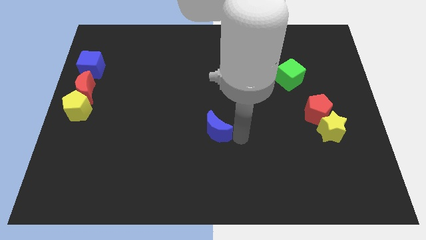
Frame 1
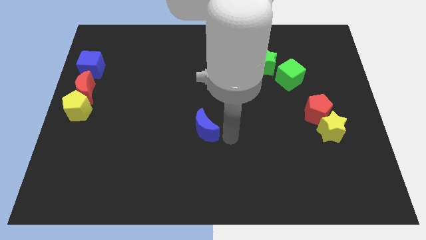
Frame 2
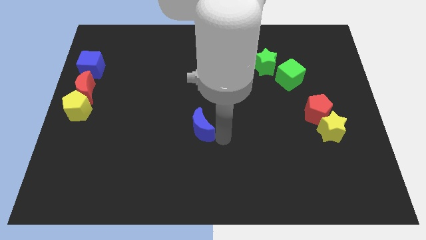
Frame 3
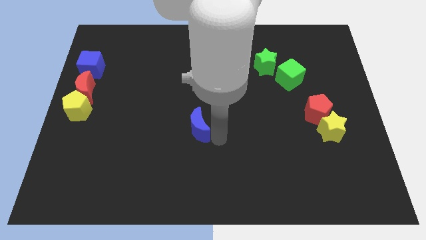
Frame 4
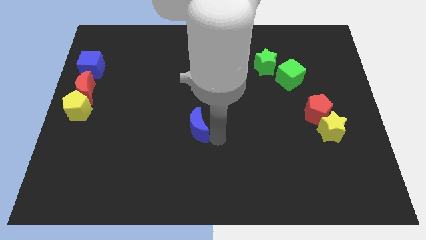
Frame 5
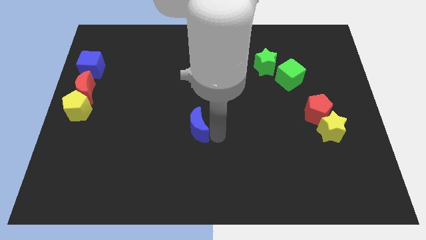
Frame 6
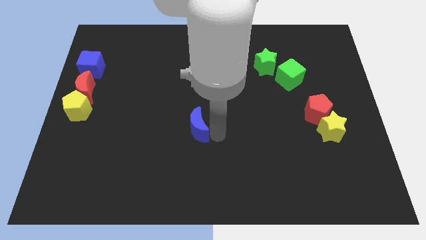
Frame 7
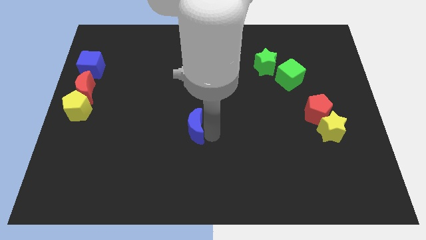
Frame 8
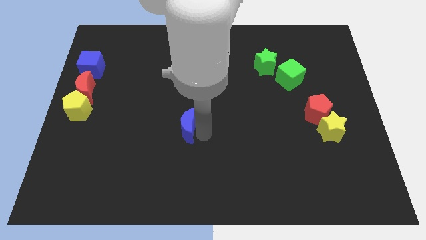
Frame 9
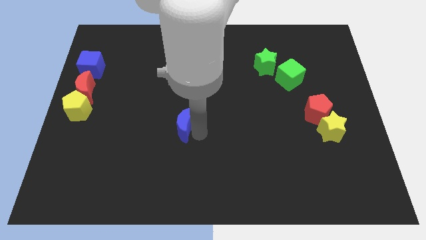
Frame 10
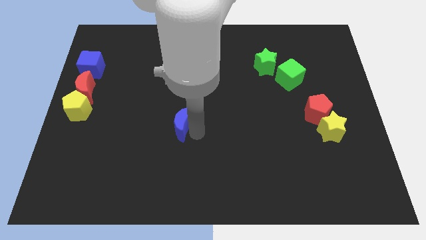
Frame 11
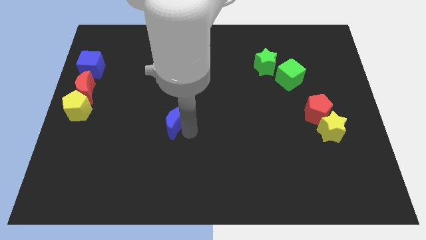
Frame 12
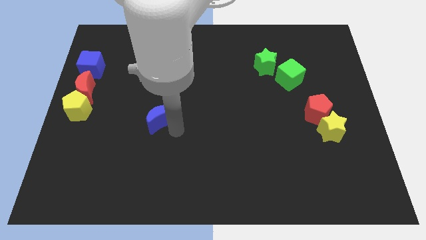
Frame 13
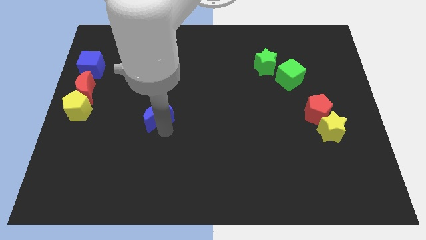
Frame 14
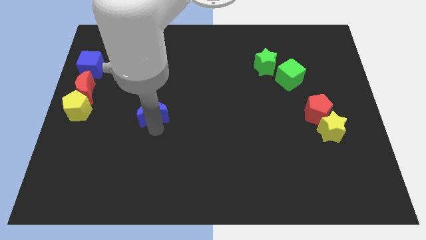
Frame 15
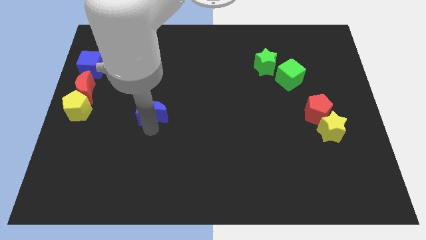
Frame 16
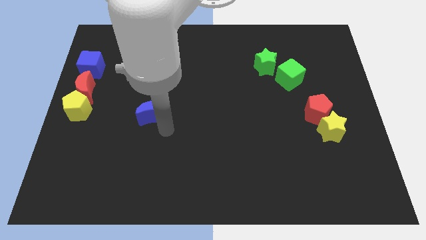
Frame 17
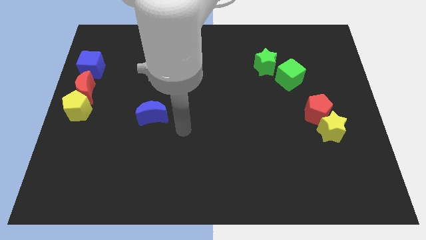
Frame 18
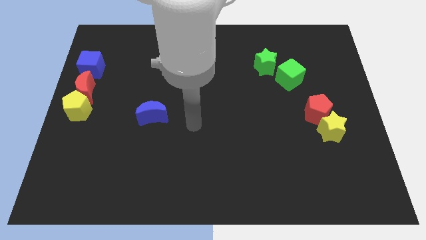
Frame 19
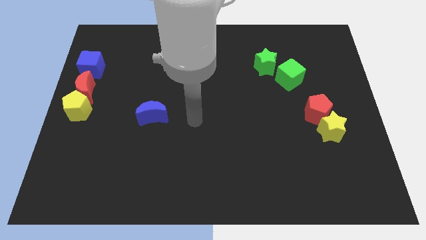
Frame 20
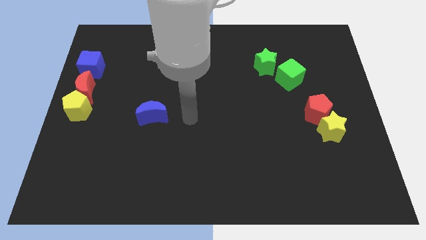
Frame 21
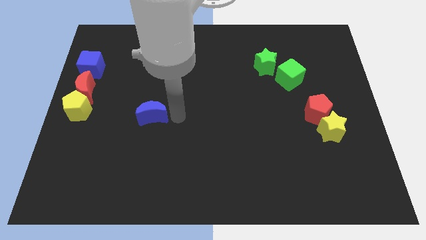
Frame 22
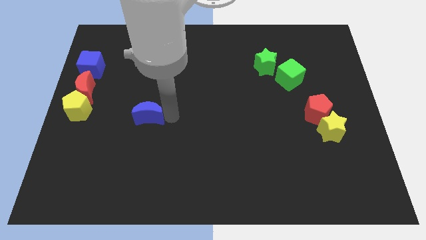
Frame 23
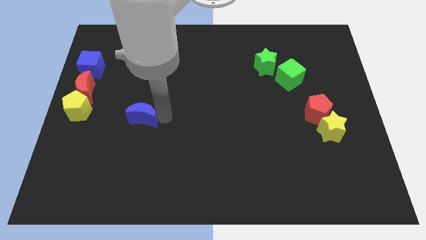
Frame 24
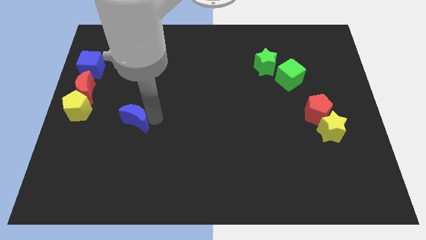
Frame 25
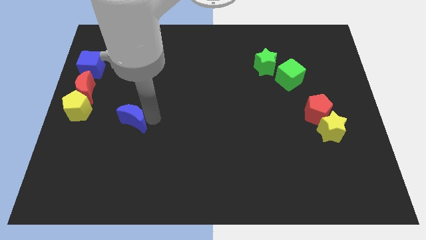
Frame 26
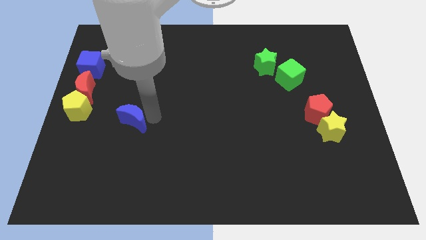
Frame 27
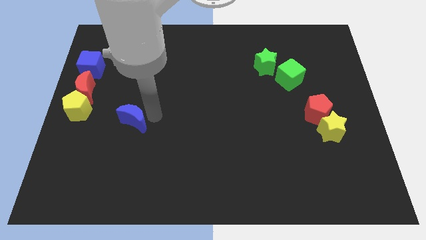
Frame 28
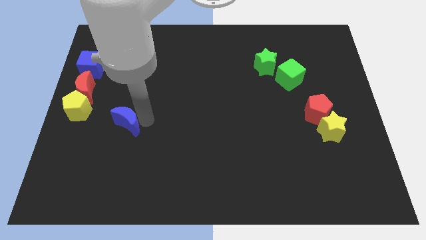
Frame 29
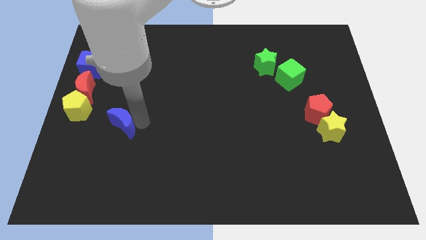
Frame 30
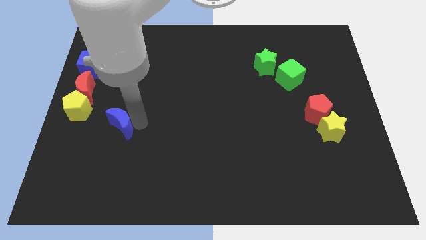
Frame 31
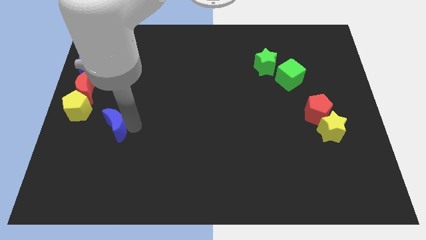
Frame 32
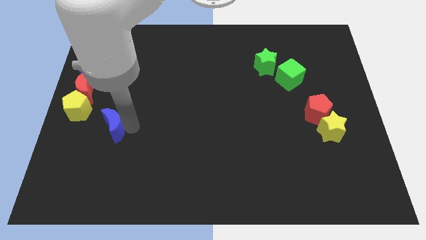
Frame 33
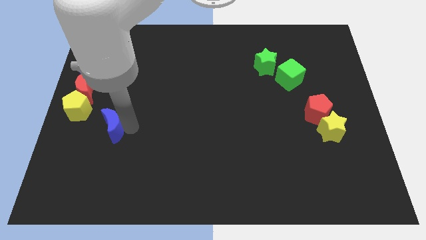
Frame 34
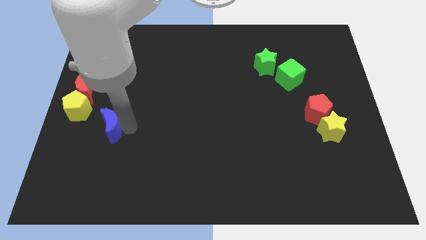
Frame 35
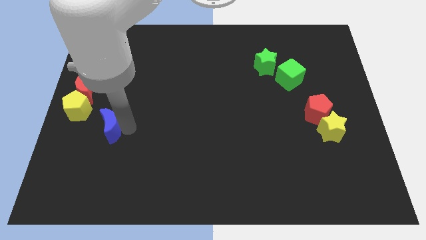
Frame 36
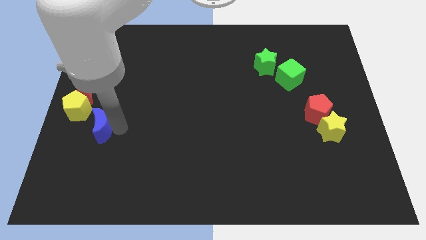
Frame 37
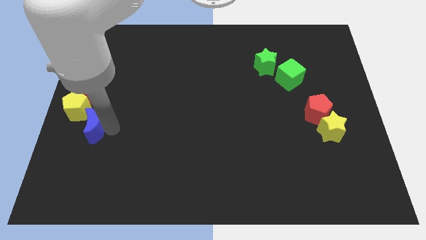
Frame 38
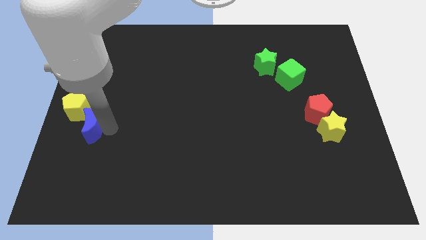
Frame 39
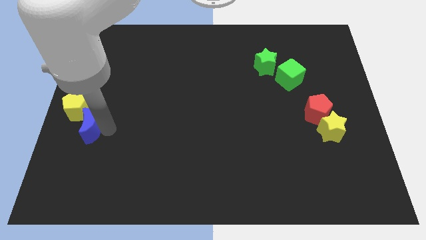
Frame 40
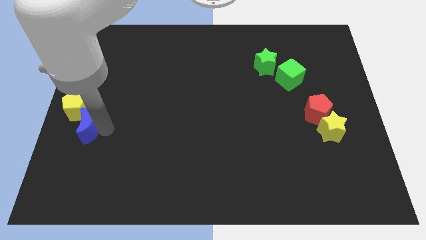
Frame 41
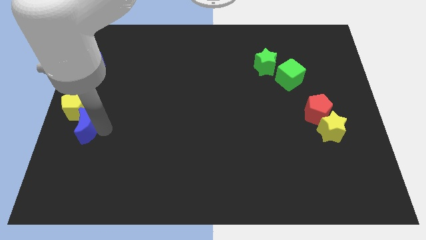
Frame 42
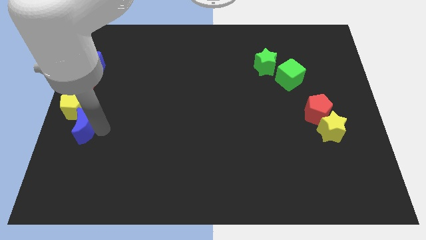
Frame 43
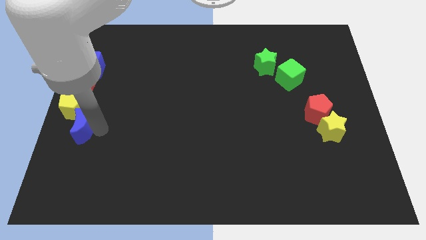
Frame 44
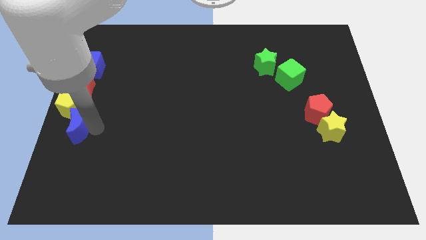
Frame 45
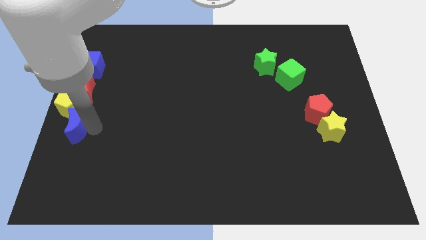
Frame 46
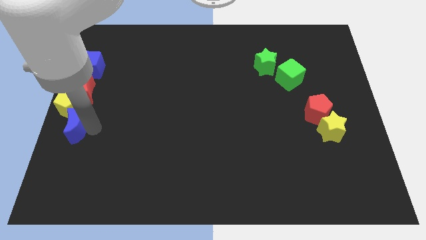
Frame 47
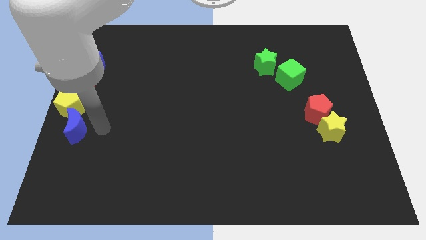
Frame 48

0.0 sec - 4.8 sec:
move the blue crescent below the yellow pentagon

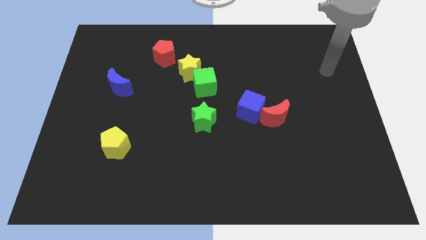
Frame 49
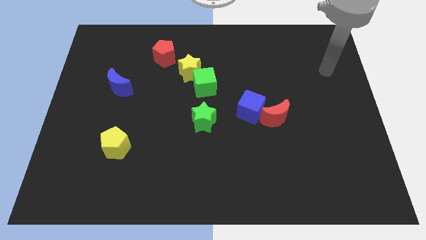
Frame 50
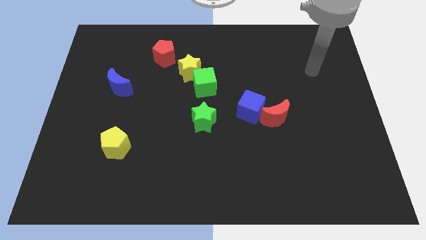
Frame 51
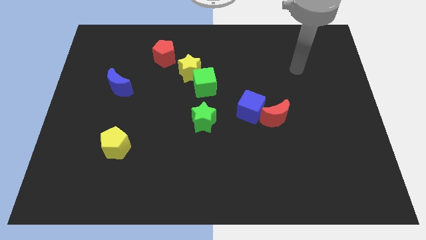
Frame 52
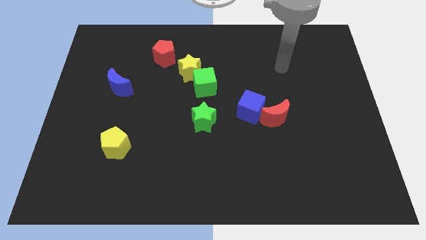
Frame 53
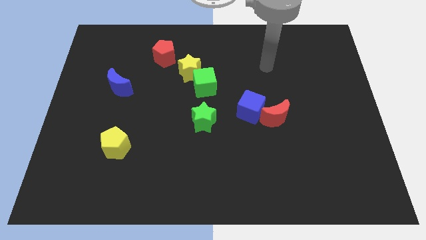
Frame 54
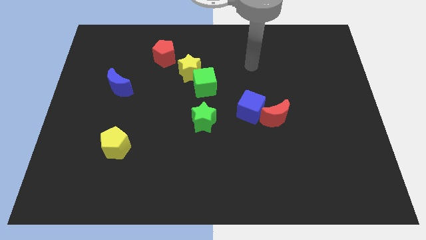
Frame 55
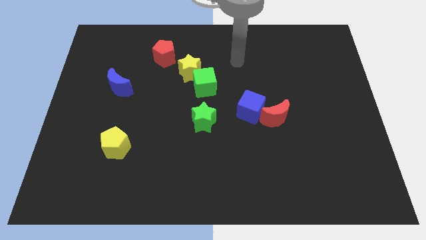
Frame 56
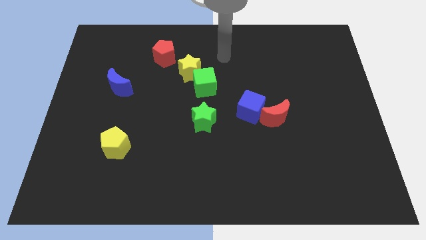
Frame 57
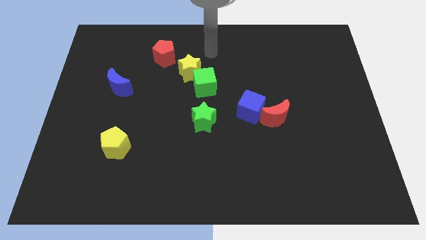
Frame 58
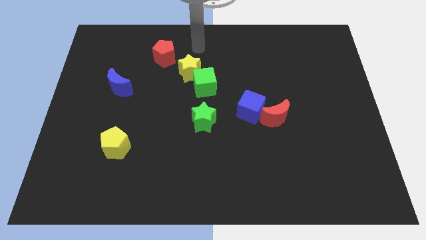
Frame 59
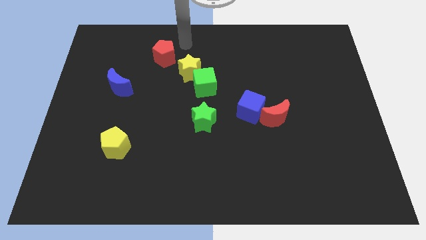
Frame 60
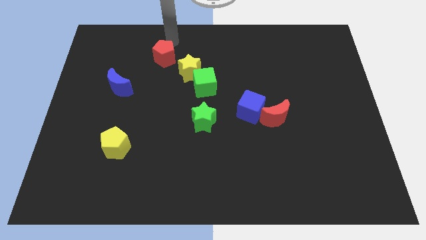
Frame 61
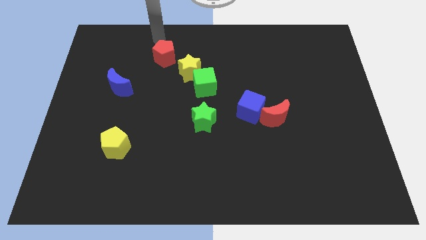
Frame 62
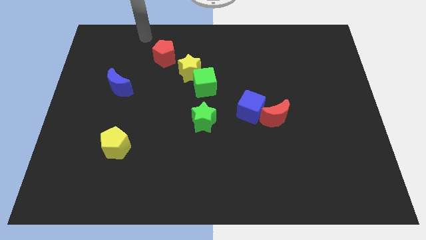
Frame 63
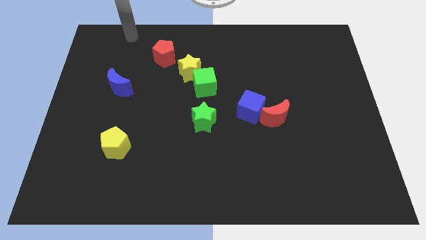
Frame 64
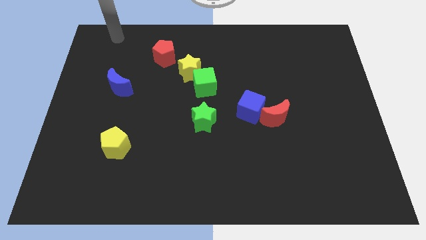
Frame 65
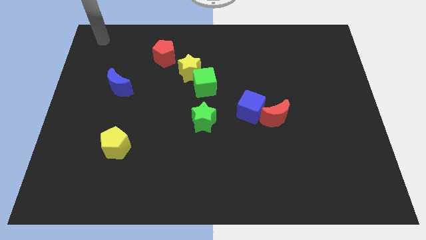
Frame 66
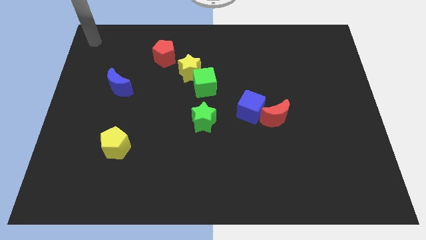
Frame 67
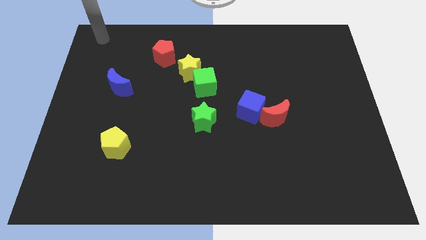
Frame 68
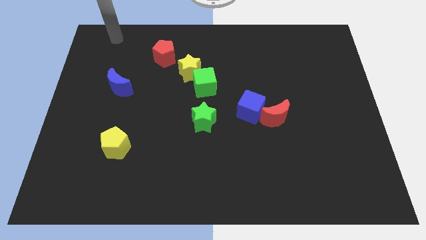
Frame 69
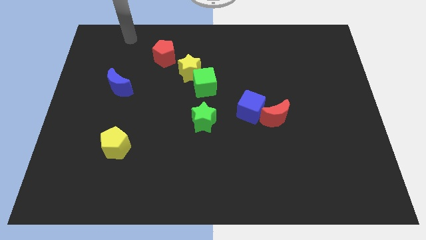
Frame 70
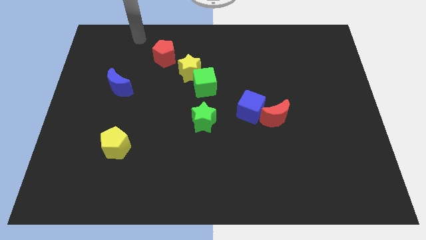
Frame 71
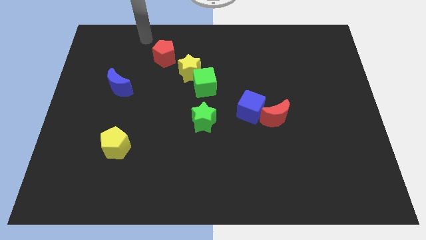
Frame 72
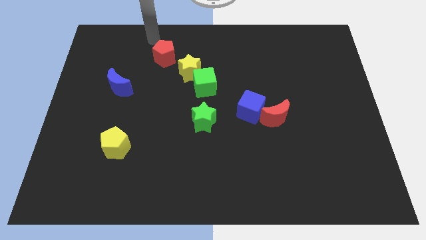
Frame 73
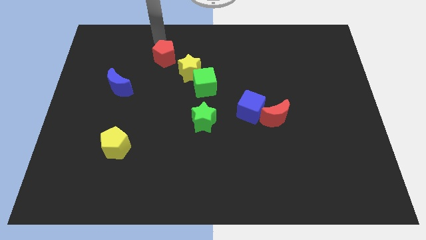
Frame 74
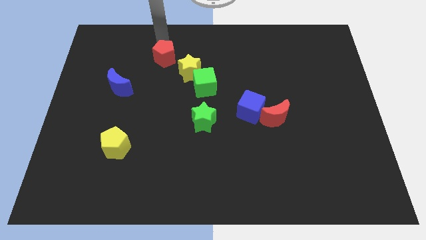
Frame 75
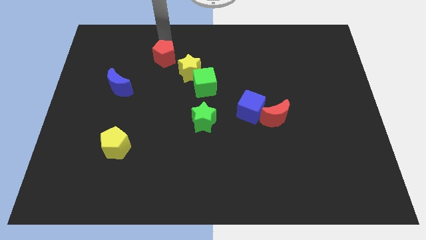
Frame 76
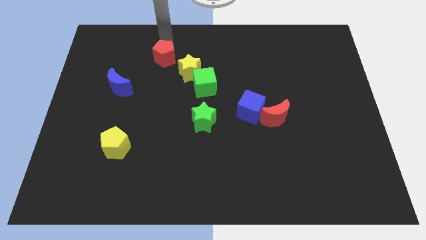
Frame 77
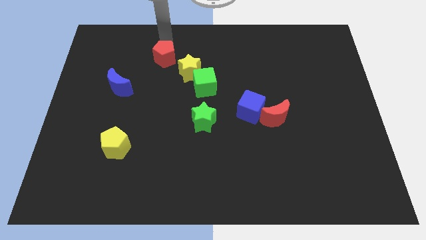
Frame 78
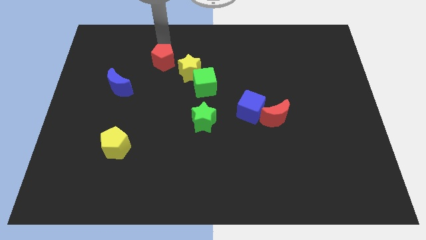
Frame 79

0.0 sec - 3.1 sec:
touch the red pentagon with your arm

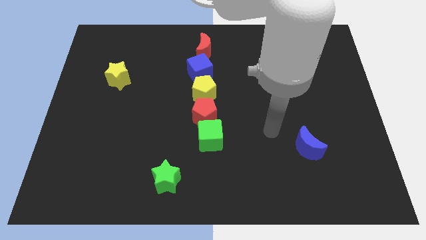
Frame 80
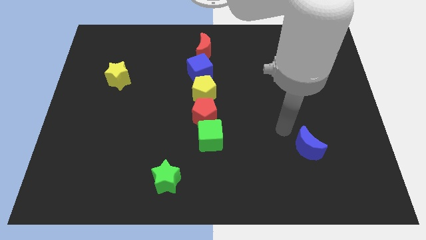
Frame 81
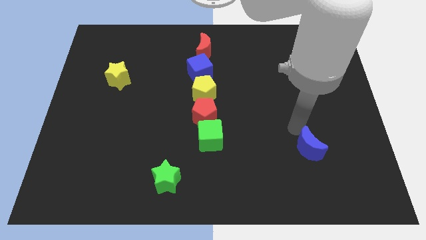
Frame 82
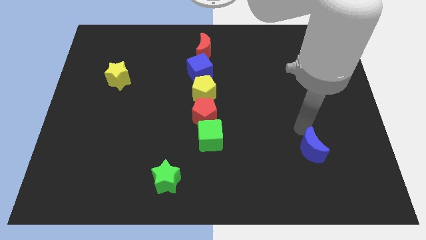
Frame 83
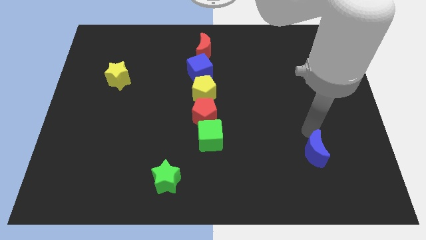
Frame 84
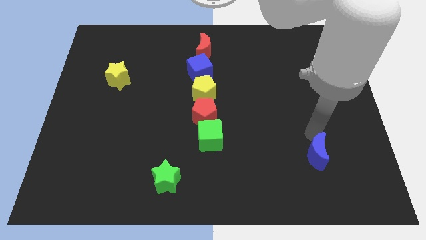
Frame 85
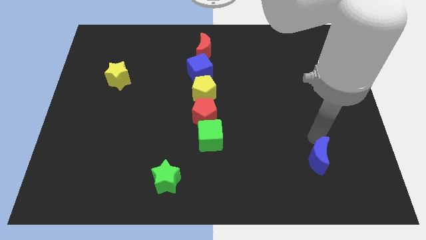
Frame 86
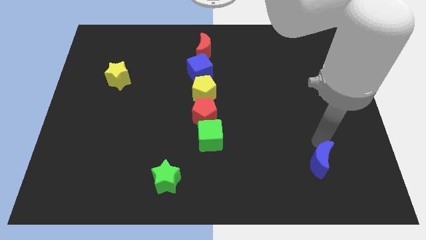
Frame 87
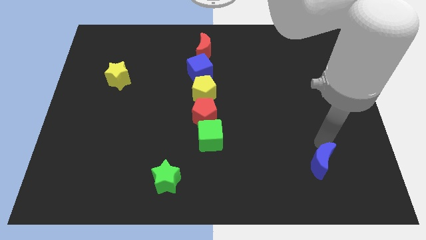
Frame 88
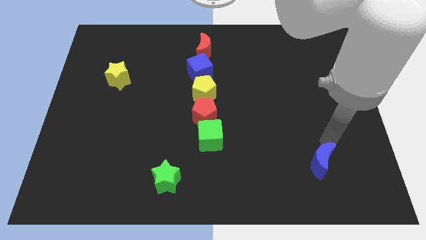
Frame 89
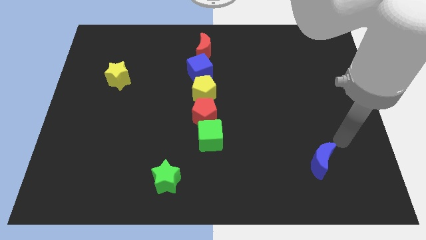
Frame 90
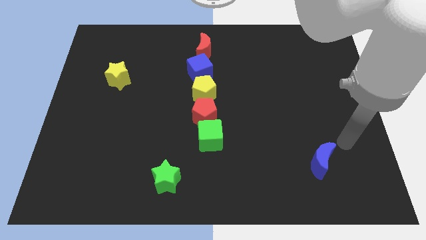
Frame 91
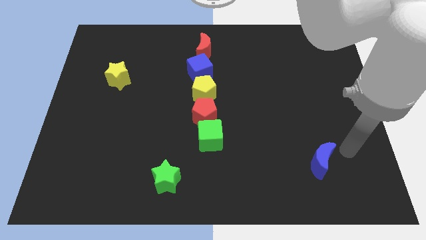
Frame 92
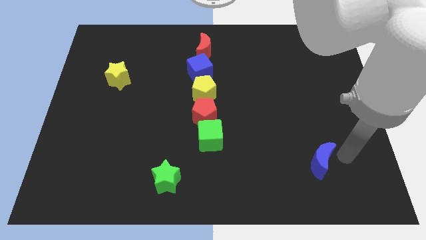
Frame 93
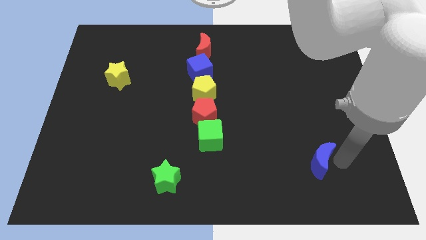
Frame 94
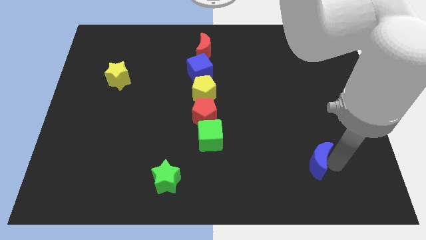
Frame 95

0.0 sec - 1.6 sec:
point at the right side of the blue moon
